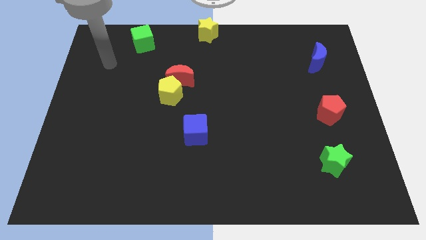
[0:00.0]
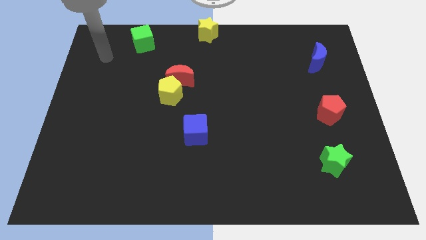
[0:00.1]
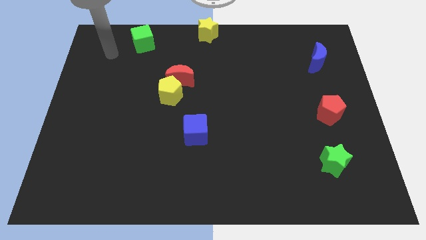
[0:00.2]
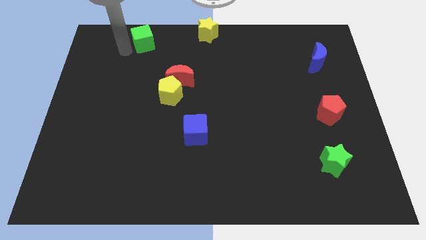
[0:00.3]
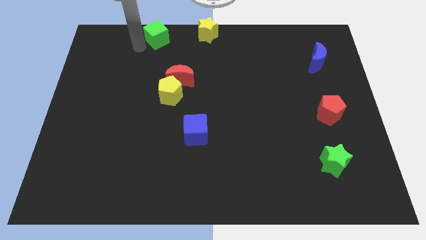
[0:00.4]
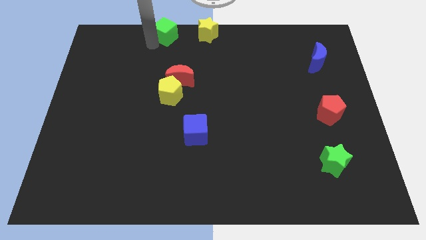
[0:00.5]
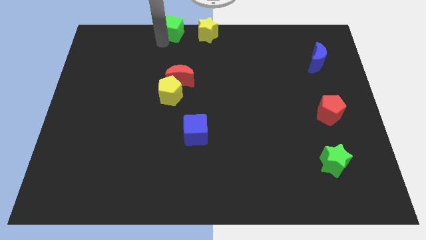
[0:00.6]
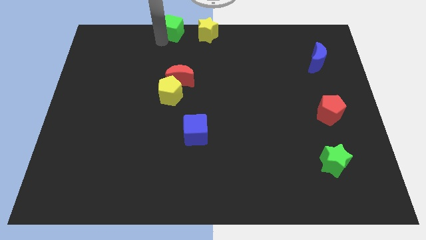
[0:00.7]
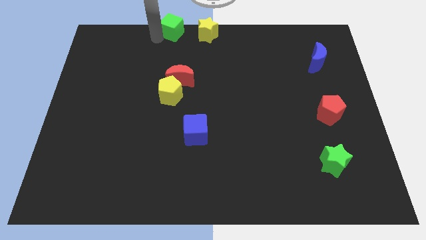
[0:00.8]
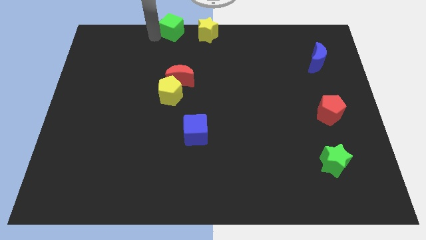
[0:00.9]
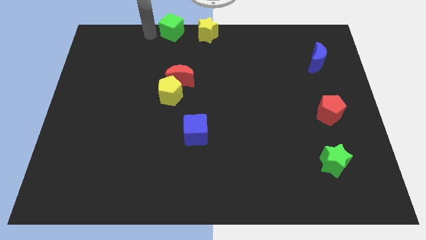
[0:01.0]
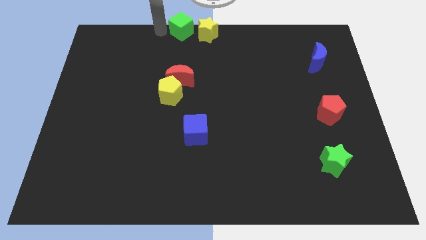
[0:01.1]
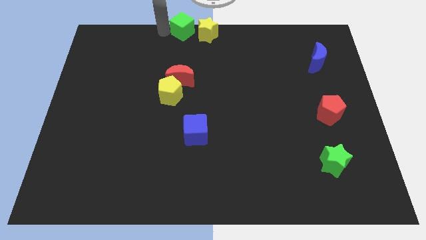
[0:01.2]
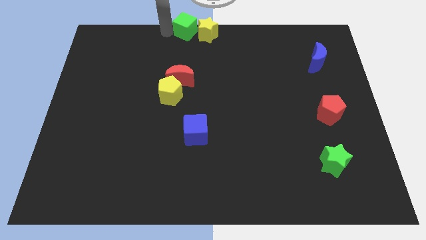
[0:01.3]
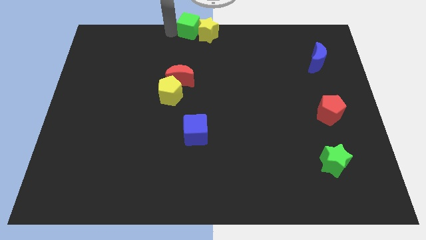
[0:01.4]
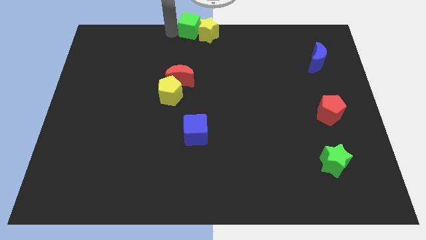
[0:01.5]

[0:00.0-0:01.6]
move the green cube into the yellow star

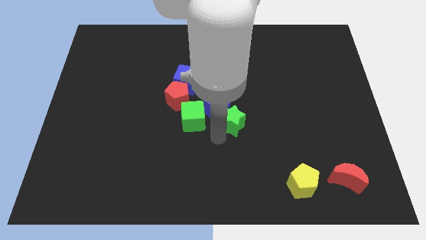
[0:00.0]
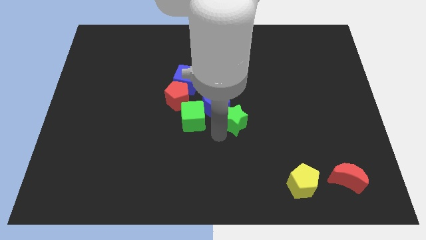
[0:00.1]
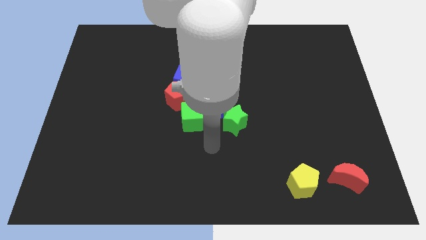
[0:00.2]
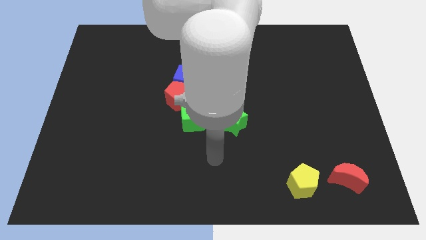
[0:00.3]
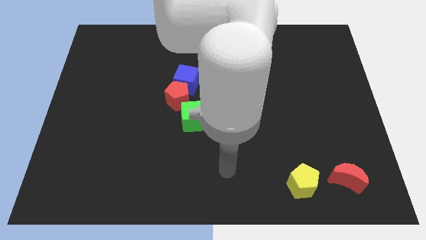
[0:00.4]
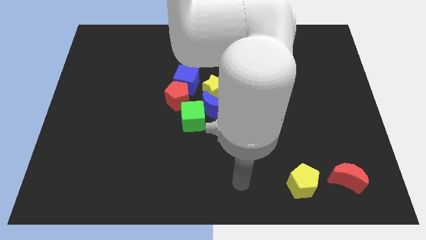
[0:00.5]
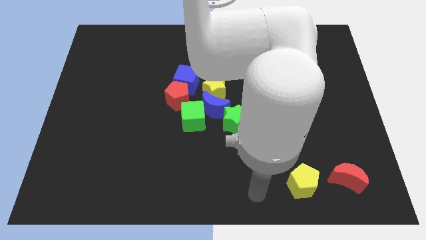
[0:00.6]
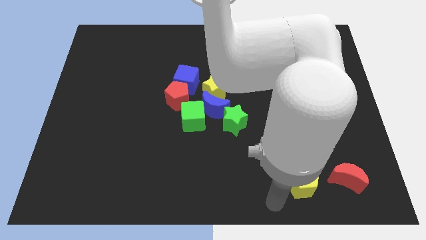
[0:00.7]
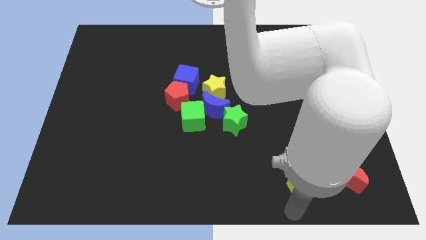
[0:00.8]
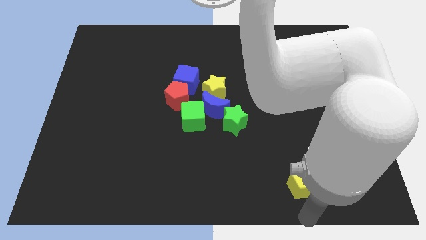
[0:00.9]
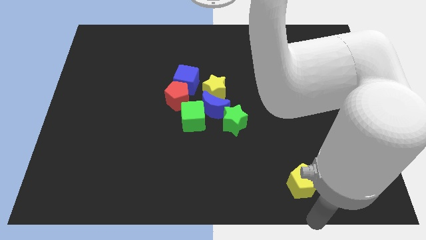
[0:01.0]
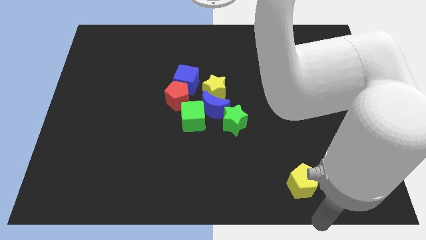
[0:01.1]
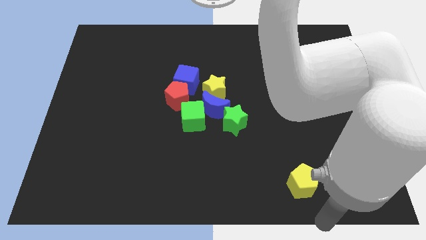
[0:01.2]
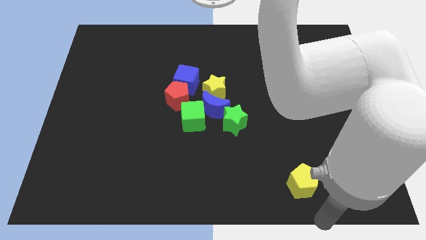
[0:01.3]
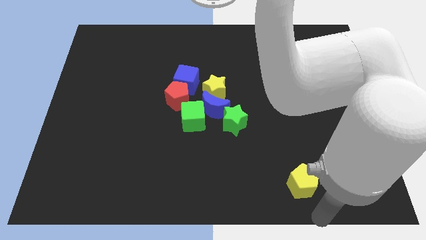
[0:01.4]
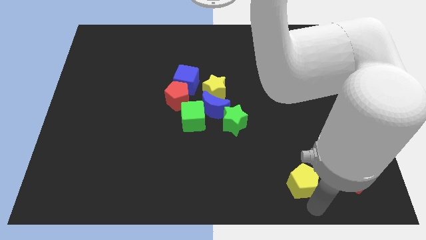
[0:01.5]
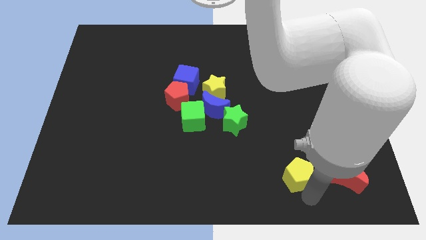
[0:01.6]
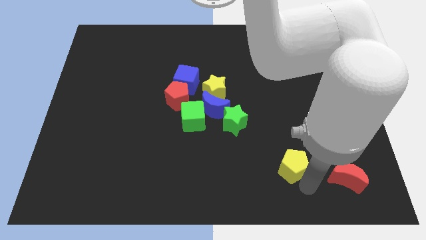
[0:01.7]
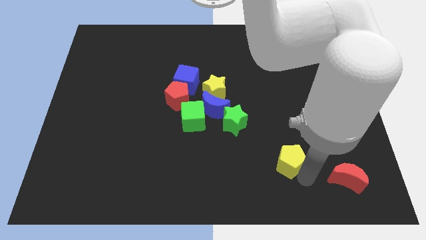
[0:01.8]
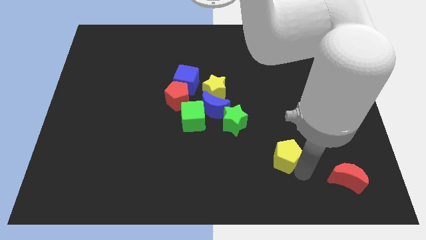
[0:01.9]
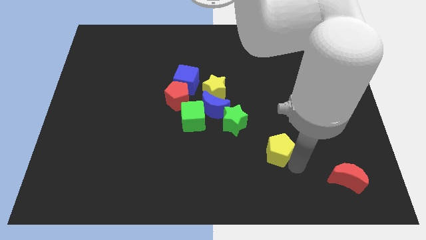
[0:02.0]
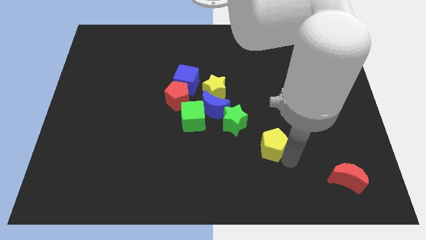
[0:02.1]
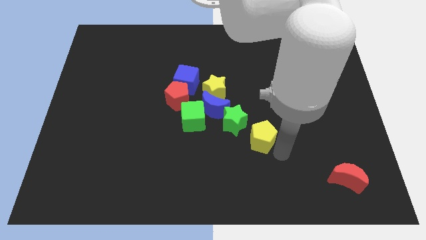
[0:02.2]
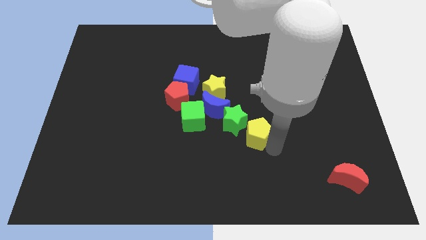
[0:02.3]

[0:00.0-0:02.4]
place the yellow pentagon to the bottom right side of green star

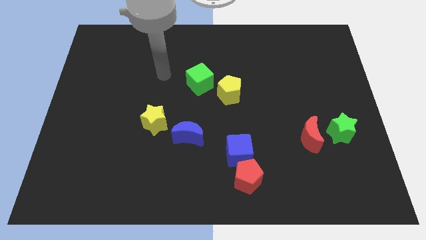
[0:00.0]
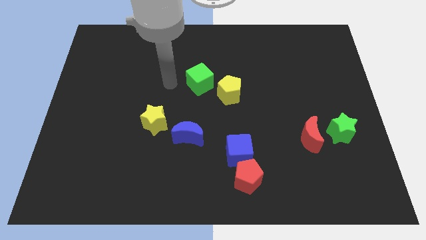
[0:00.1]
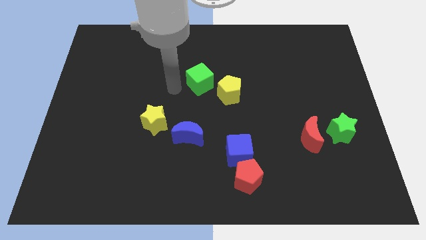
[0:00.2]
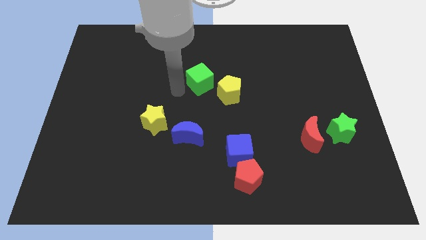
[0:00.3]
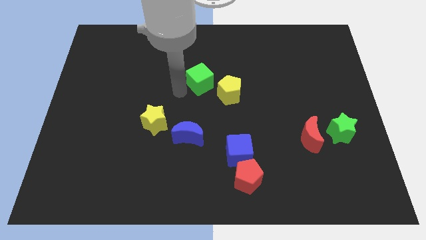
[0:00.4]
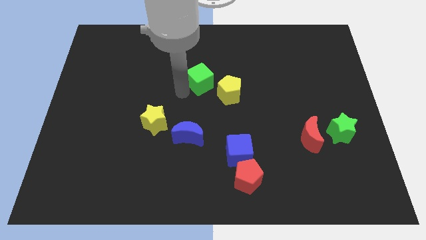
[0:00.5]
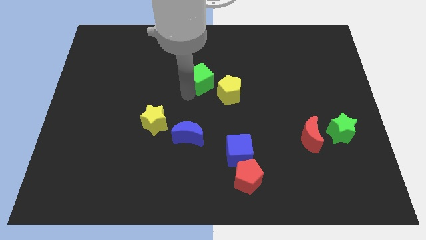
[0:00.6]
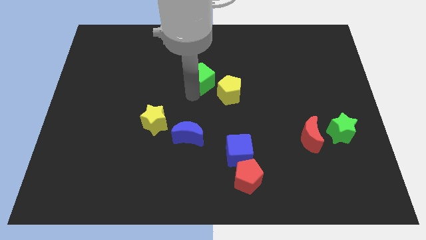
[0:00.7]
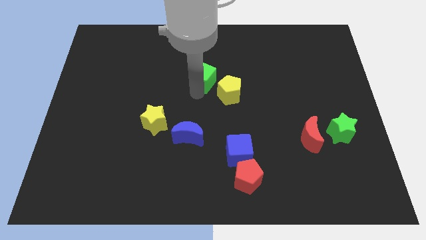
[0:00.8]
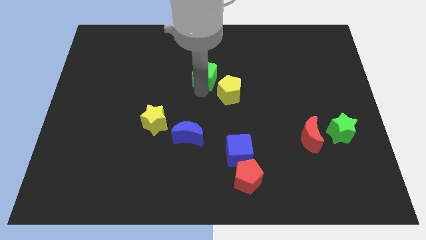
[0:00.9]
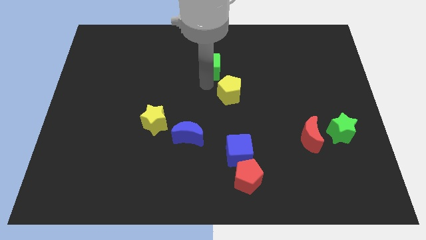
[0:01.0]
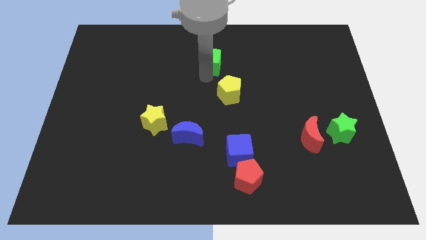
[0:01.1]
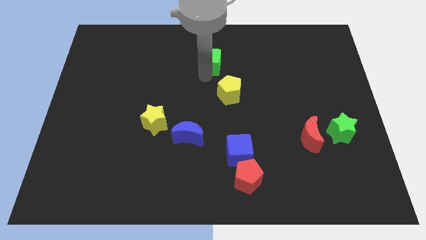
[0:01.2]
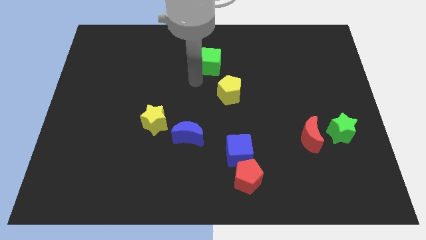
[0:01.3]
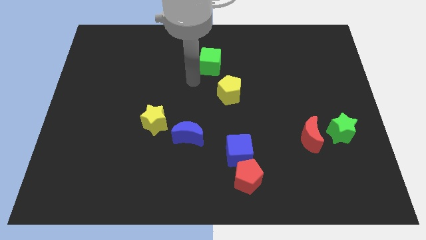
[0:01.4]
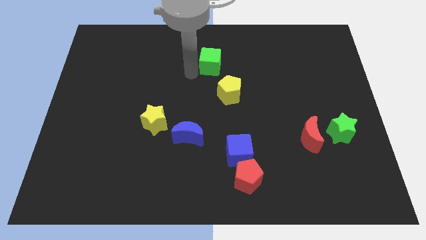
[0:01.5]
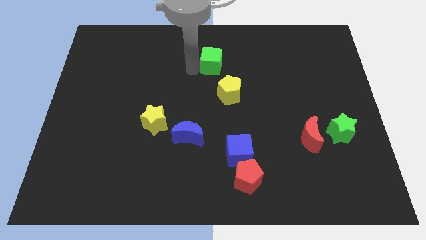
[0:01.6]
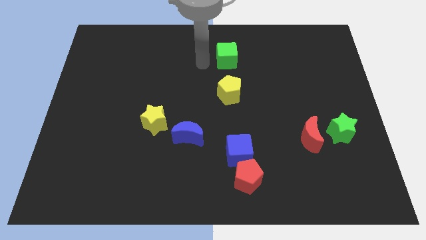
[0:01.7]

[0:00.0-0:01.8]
place the green cube above the yellow pentagon

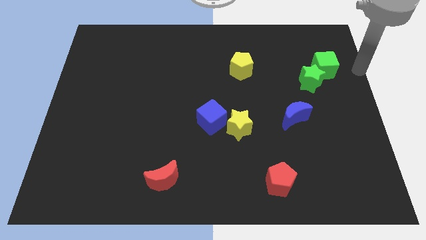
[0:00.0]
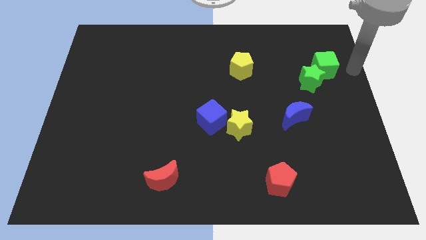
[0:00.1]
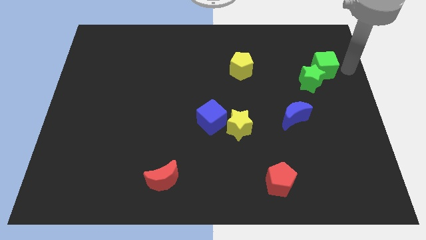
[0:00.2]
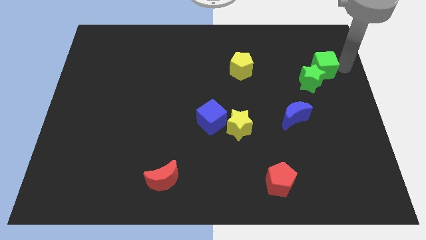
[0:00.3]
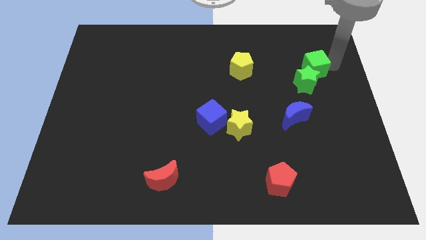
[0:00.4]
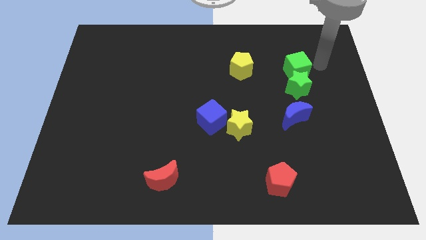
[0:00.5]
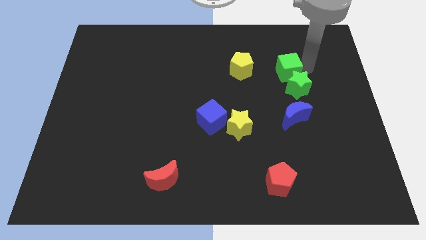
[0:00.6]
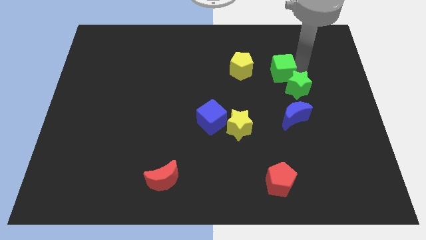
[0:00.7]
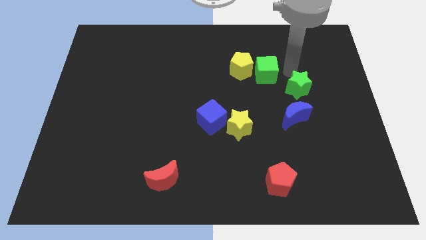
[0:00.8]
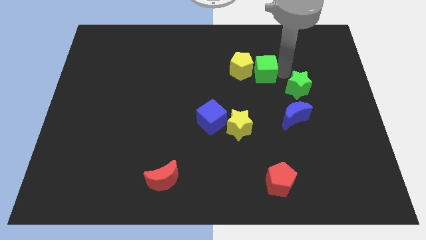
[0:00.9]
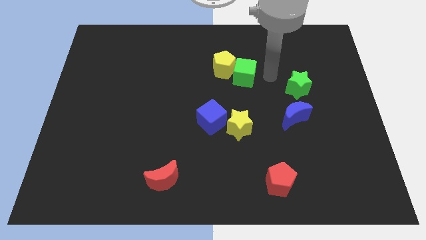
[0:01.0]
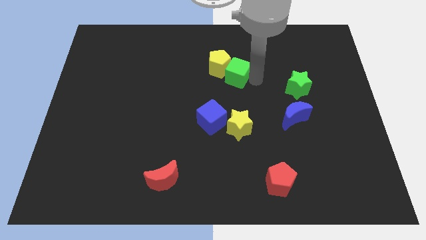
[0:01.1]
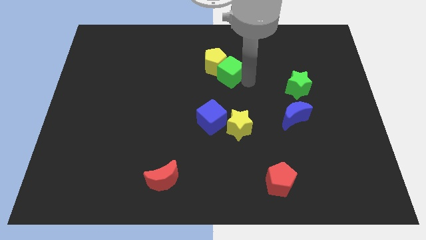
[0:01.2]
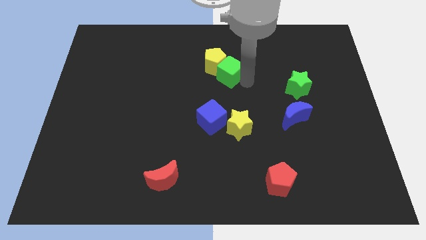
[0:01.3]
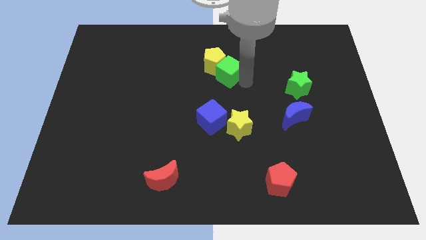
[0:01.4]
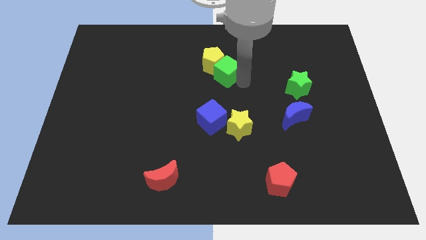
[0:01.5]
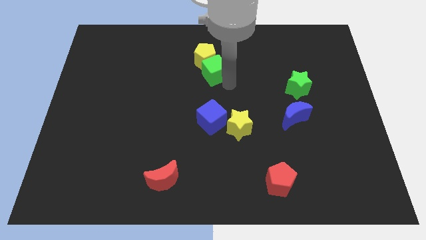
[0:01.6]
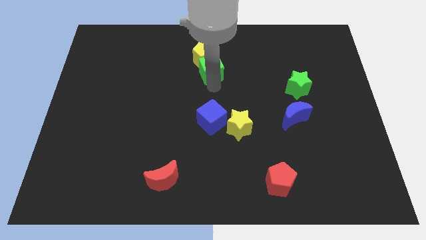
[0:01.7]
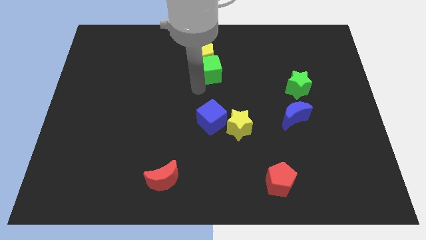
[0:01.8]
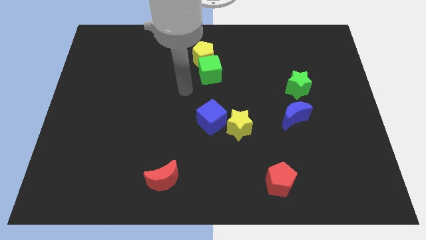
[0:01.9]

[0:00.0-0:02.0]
push the green cube into the yellow pentagon

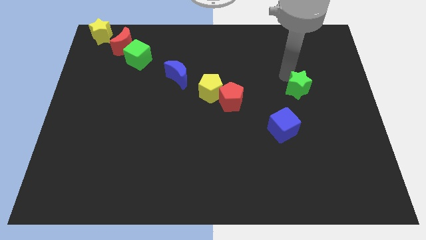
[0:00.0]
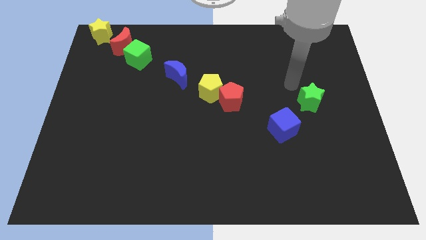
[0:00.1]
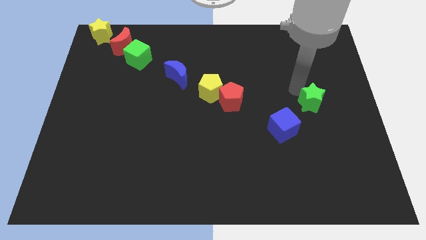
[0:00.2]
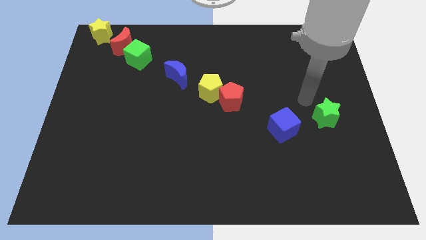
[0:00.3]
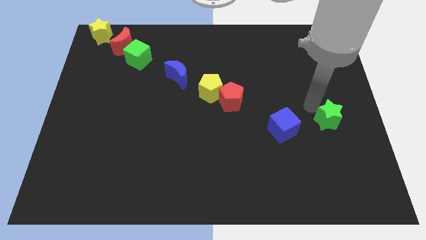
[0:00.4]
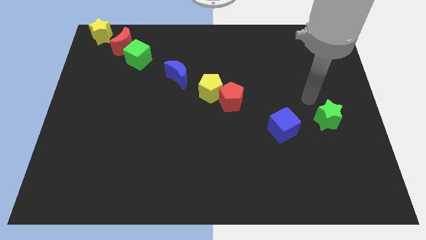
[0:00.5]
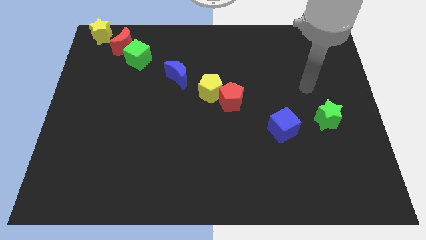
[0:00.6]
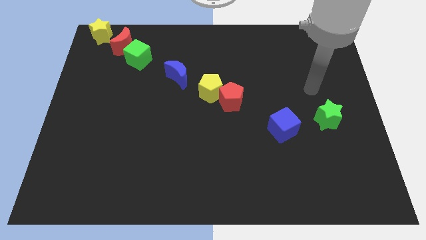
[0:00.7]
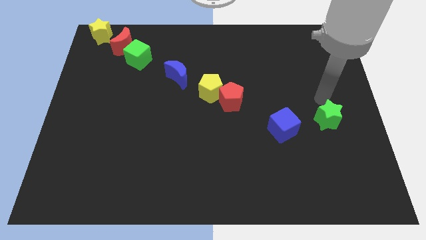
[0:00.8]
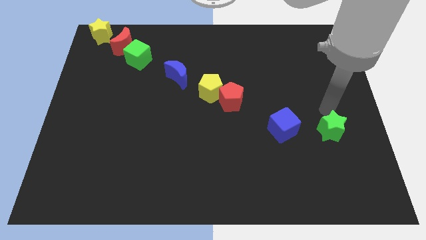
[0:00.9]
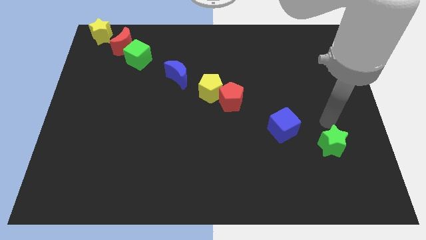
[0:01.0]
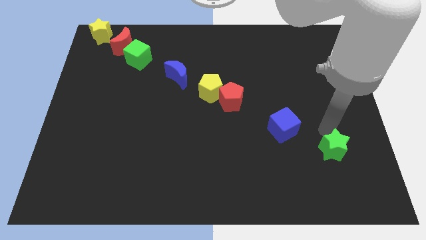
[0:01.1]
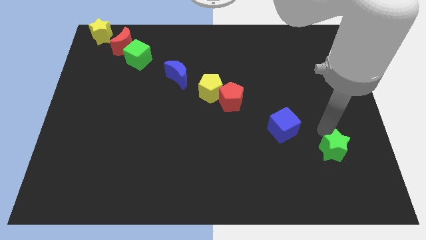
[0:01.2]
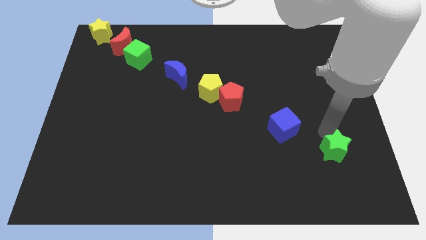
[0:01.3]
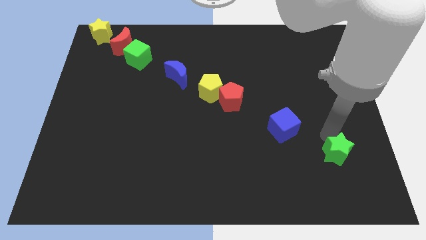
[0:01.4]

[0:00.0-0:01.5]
put the green star diagonally to the bottom right of the blue cube
